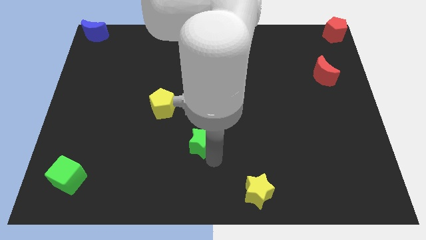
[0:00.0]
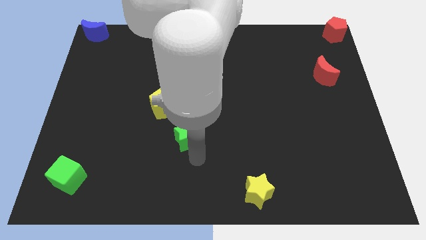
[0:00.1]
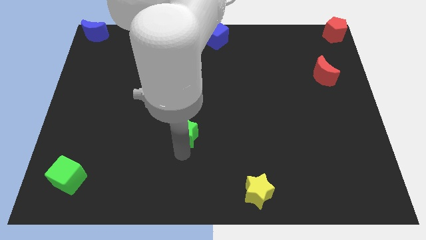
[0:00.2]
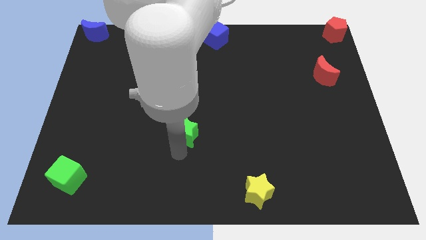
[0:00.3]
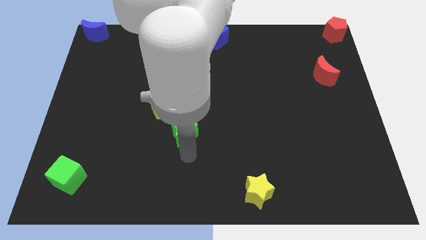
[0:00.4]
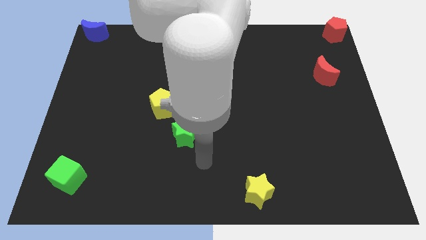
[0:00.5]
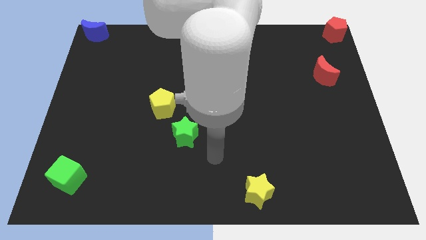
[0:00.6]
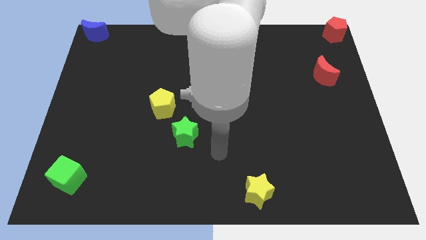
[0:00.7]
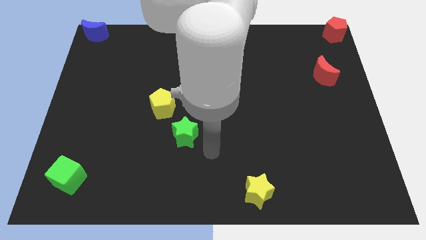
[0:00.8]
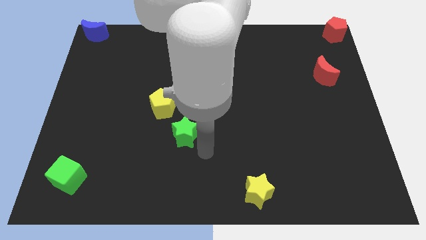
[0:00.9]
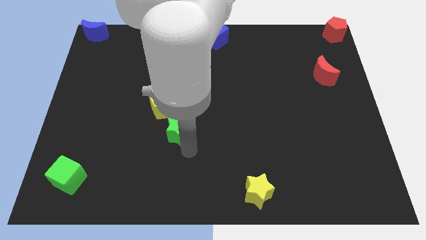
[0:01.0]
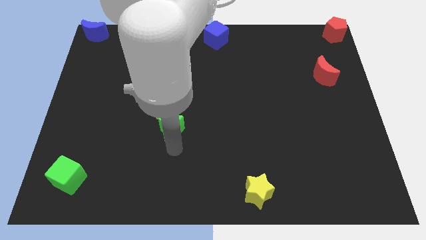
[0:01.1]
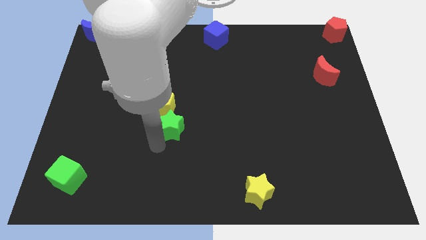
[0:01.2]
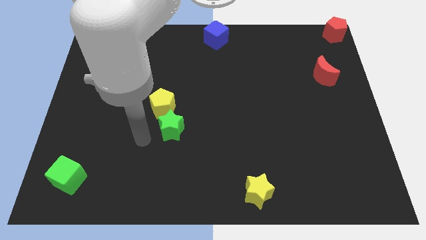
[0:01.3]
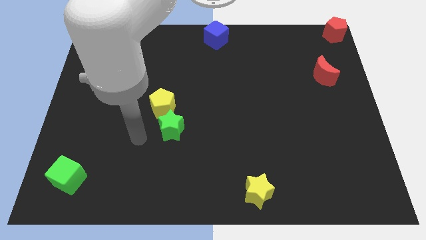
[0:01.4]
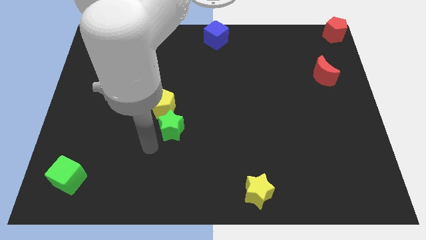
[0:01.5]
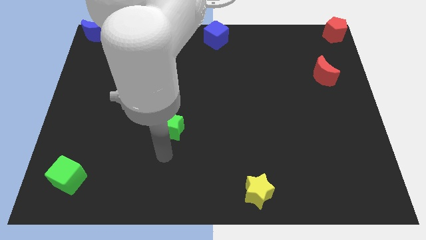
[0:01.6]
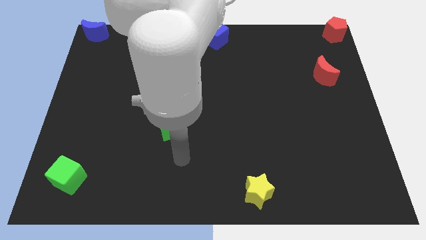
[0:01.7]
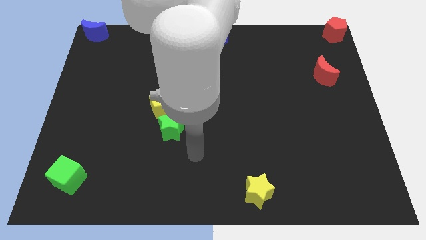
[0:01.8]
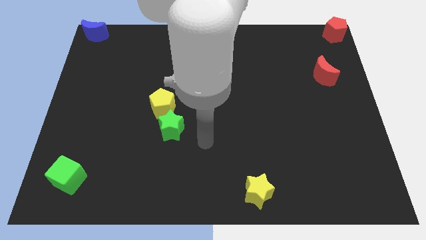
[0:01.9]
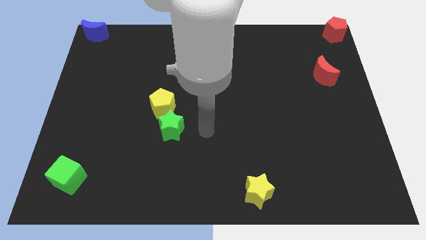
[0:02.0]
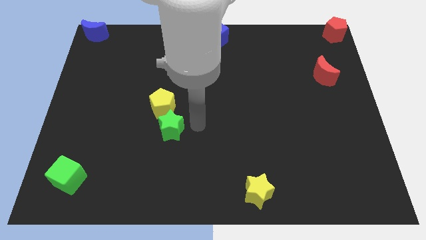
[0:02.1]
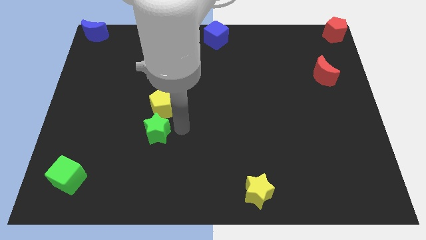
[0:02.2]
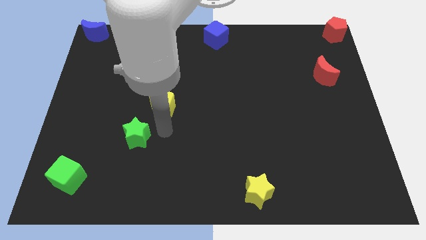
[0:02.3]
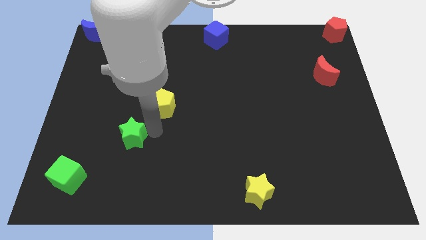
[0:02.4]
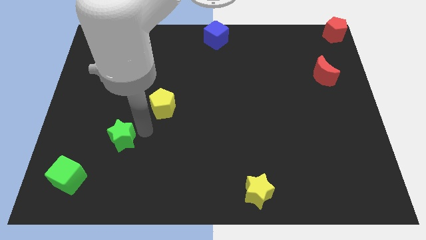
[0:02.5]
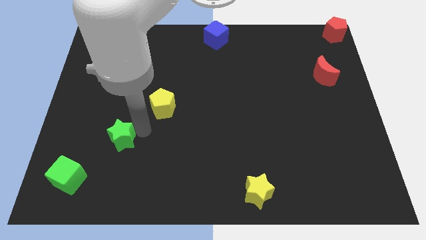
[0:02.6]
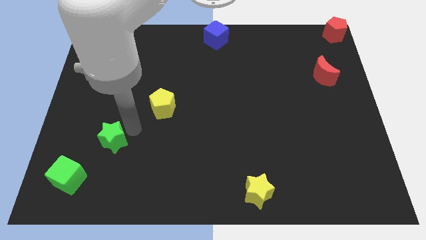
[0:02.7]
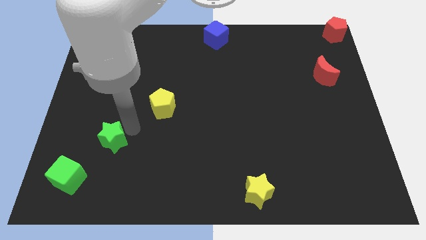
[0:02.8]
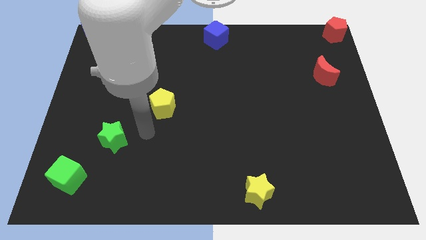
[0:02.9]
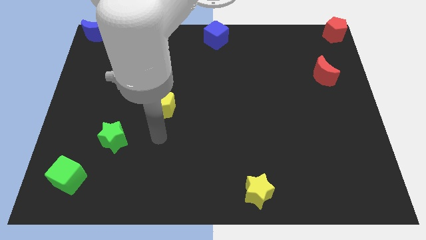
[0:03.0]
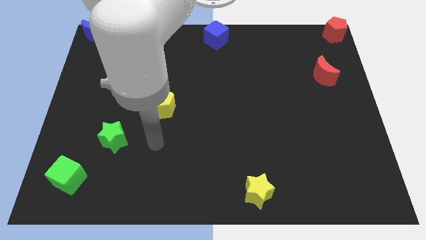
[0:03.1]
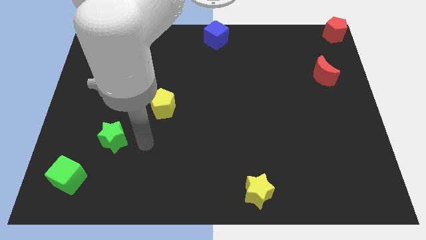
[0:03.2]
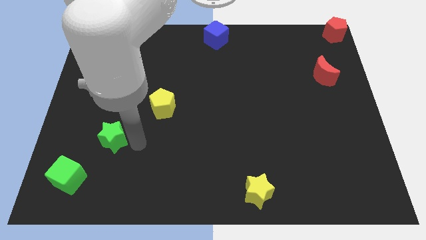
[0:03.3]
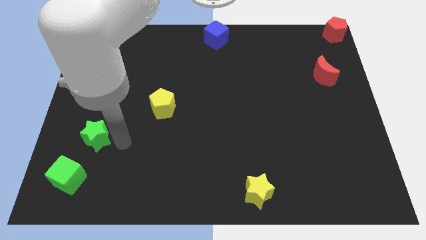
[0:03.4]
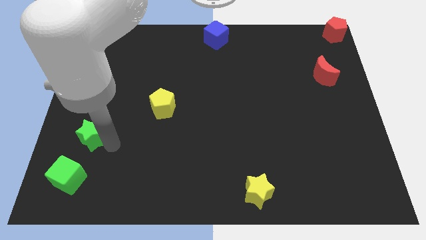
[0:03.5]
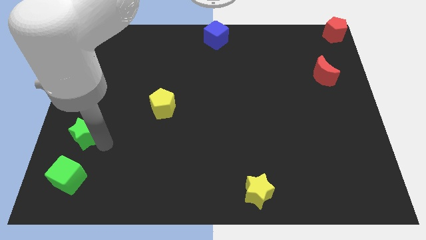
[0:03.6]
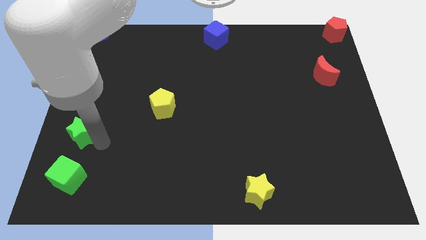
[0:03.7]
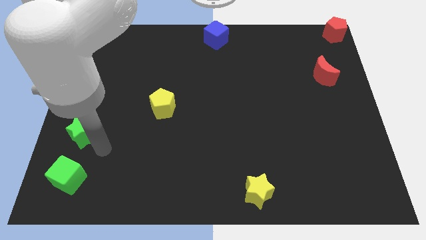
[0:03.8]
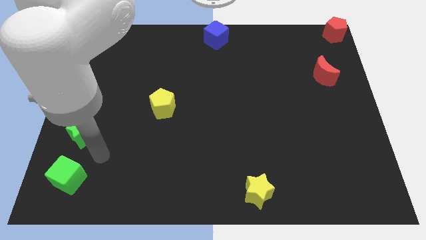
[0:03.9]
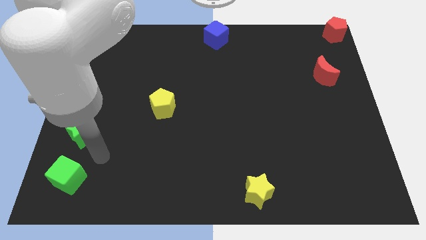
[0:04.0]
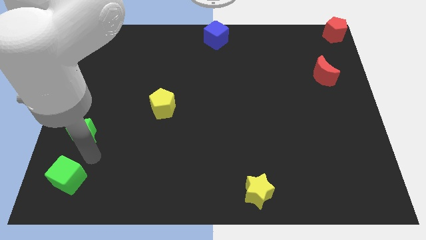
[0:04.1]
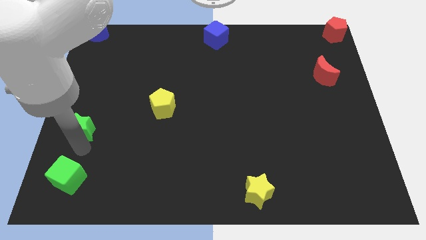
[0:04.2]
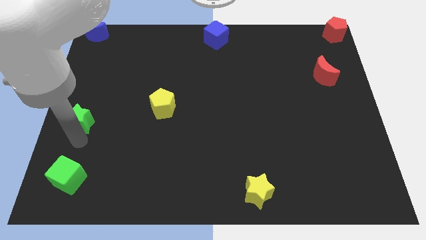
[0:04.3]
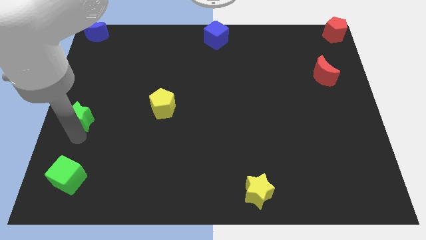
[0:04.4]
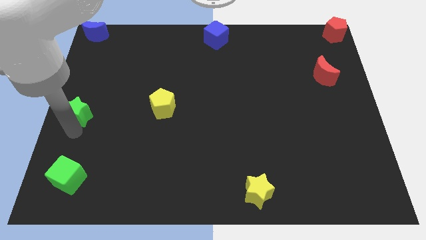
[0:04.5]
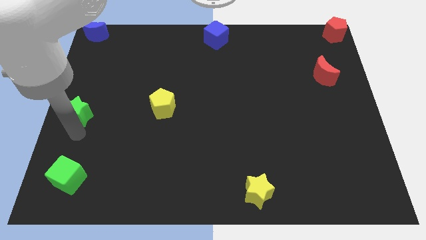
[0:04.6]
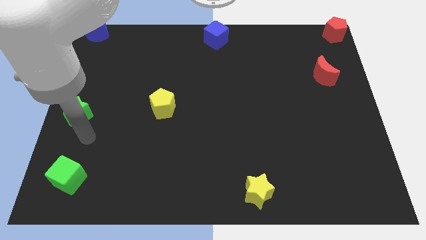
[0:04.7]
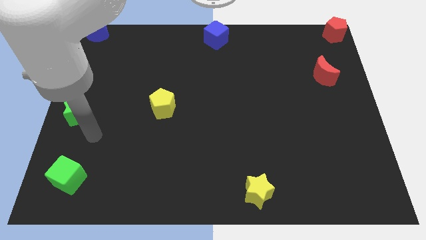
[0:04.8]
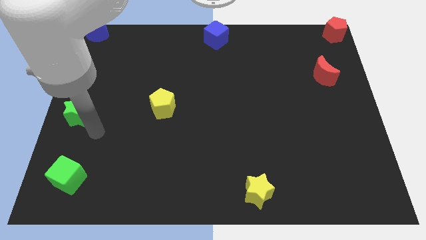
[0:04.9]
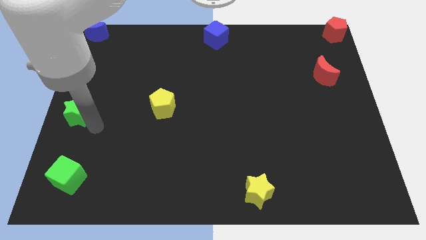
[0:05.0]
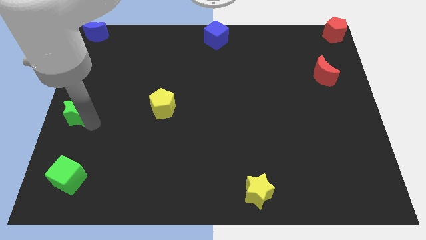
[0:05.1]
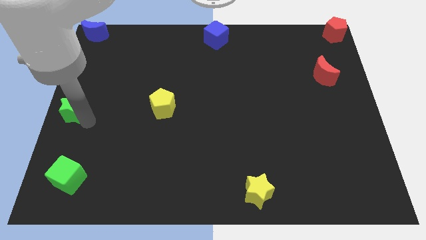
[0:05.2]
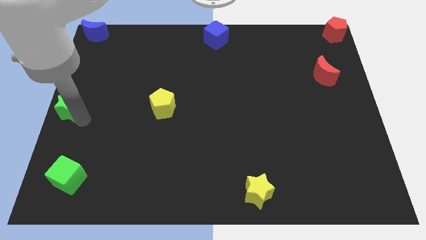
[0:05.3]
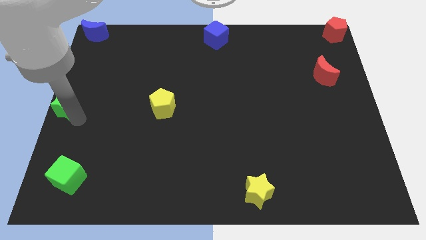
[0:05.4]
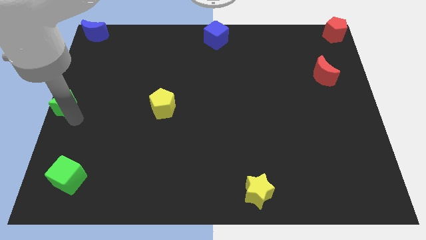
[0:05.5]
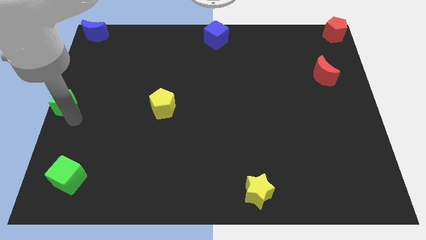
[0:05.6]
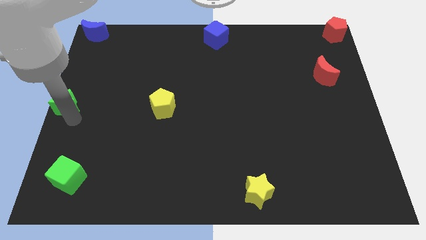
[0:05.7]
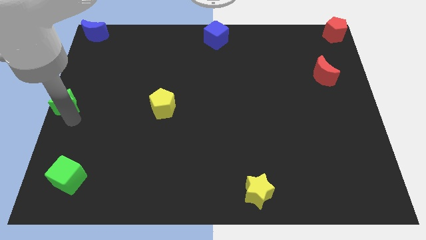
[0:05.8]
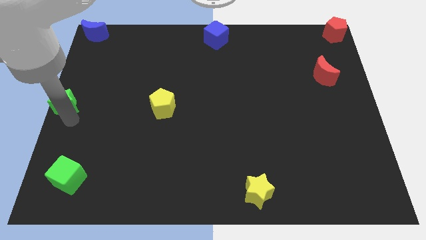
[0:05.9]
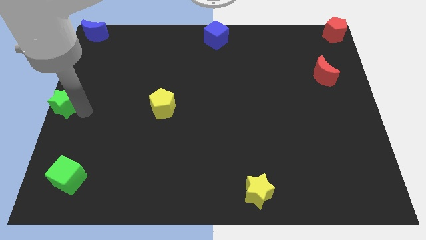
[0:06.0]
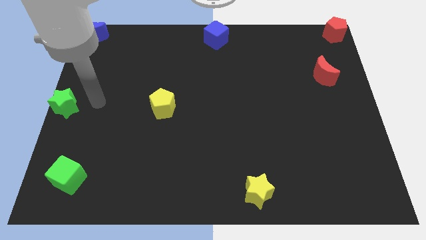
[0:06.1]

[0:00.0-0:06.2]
put the green star to the left center of the board

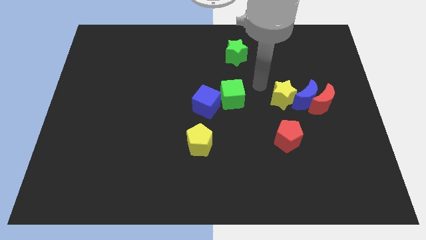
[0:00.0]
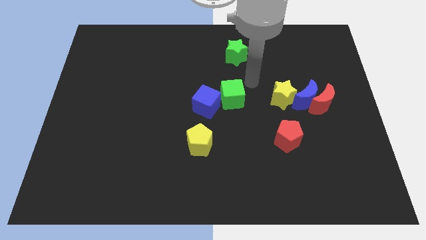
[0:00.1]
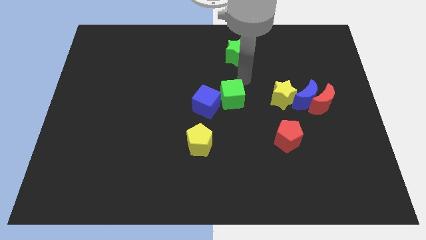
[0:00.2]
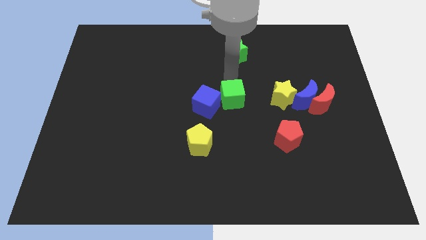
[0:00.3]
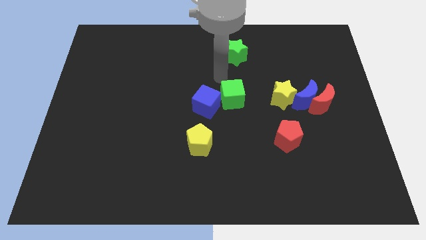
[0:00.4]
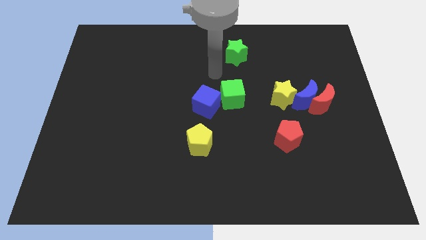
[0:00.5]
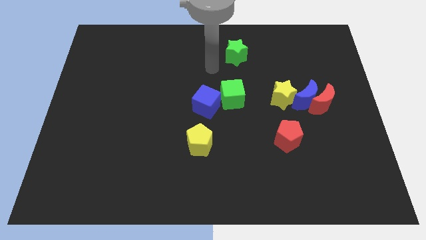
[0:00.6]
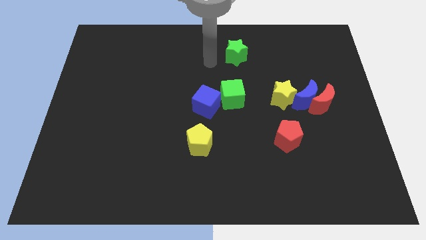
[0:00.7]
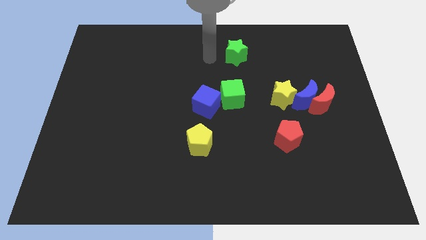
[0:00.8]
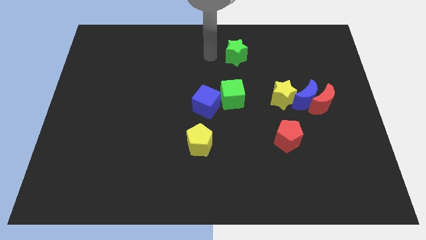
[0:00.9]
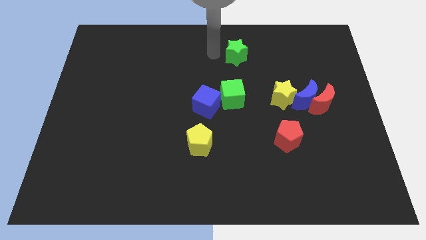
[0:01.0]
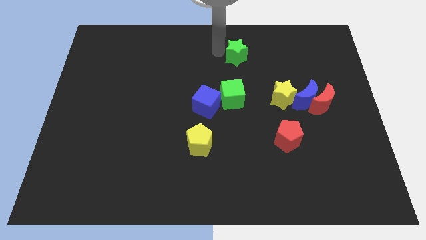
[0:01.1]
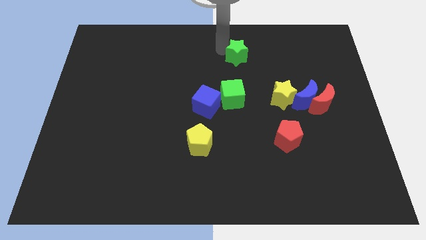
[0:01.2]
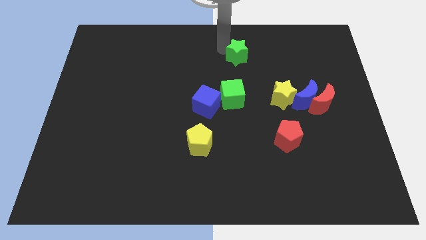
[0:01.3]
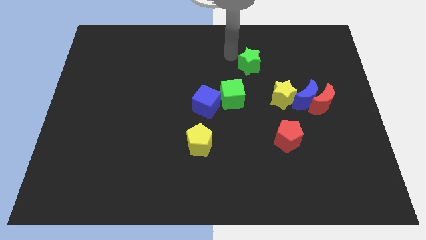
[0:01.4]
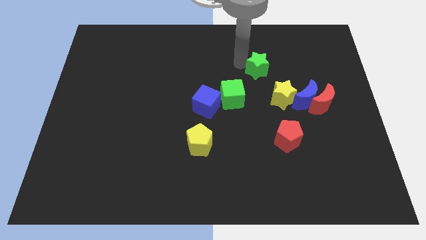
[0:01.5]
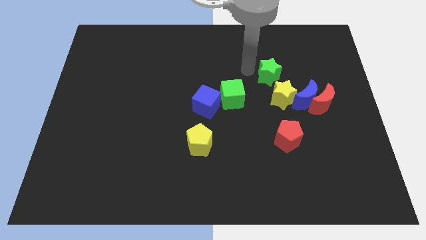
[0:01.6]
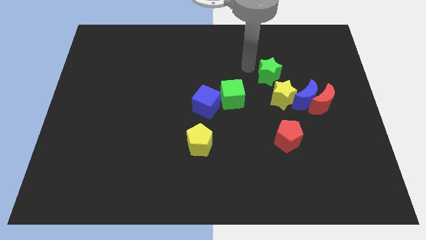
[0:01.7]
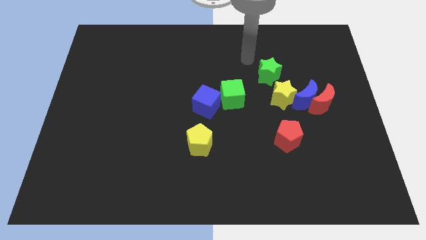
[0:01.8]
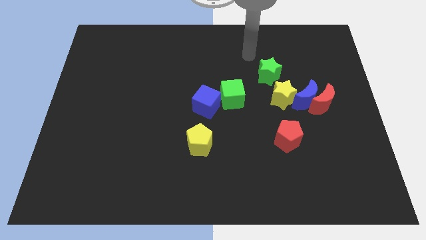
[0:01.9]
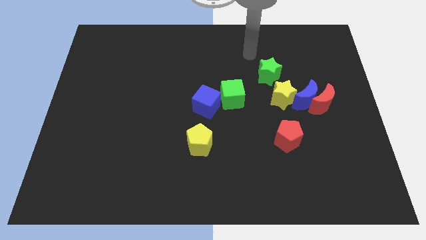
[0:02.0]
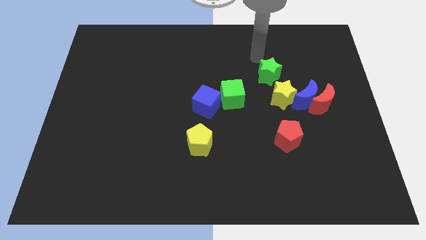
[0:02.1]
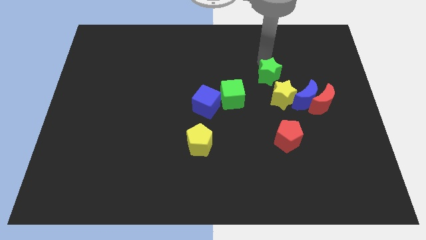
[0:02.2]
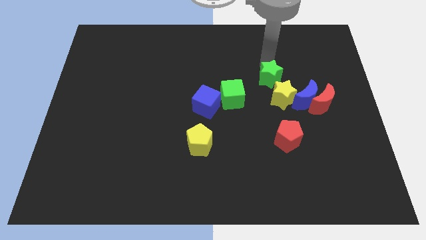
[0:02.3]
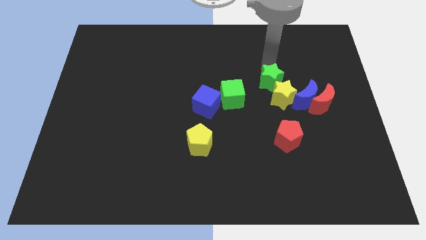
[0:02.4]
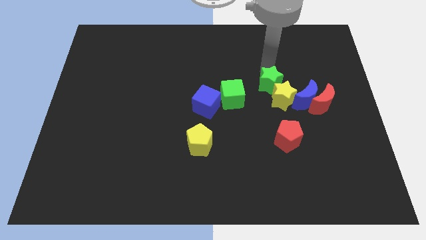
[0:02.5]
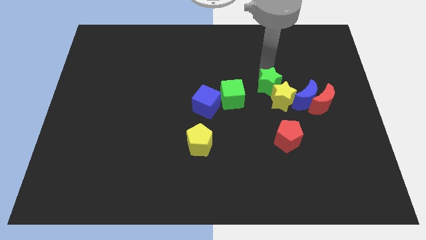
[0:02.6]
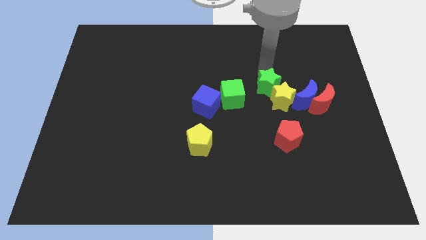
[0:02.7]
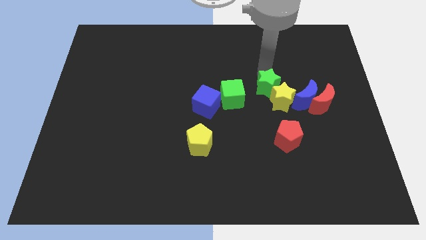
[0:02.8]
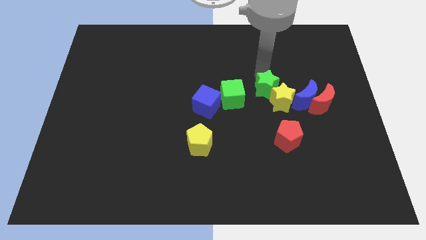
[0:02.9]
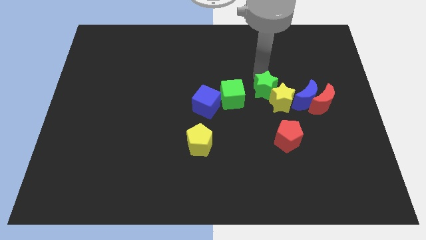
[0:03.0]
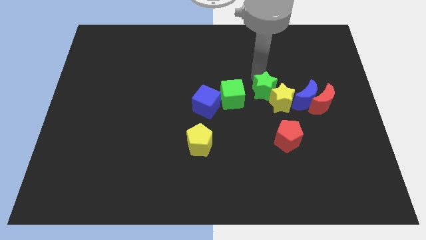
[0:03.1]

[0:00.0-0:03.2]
push the green star on the top left of the yellow star
